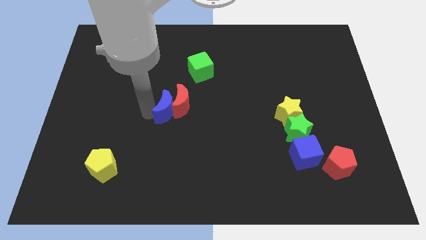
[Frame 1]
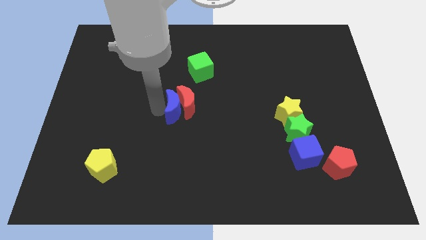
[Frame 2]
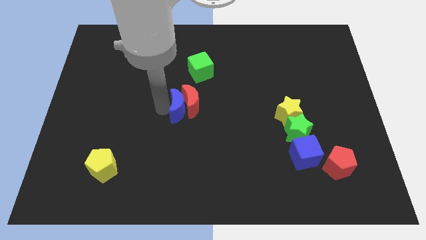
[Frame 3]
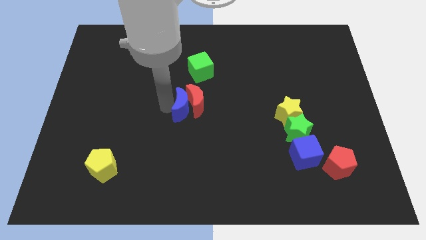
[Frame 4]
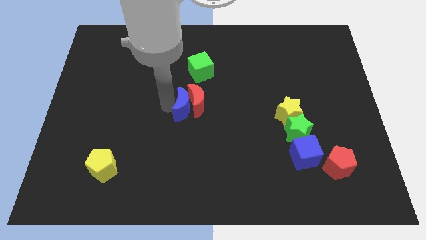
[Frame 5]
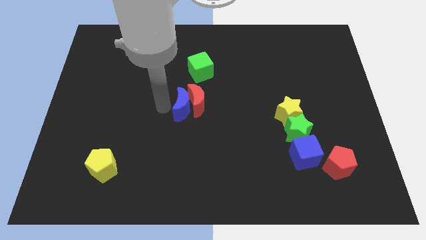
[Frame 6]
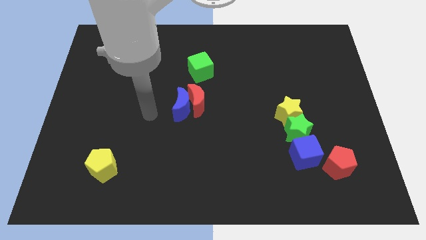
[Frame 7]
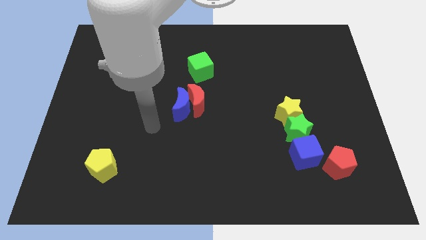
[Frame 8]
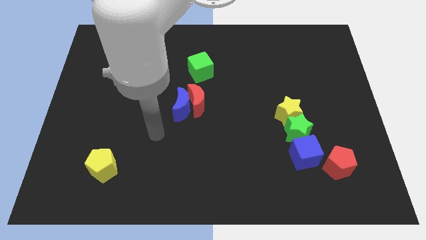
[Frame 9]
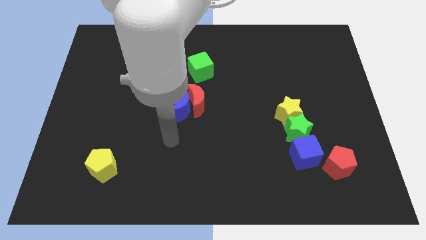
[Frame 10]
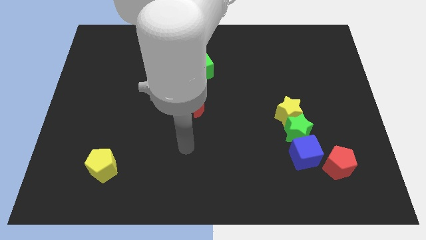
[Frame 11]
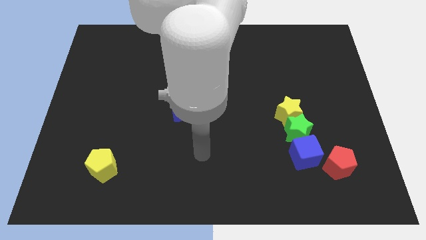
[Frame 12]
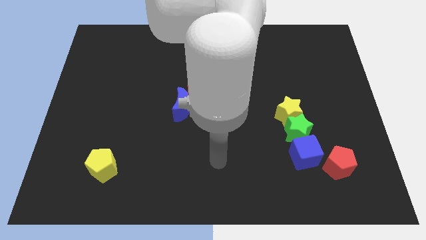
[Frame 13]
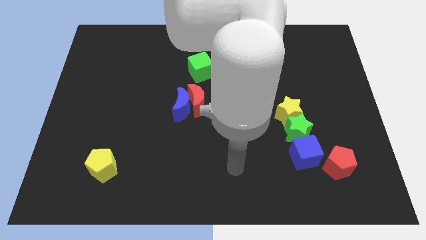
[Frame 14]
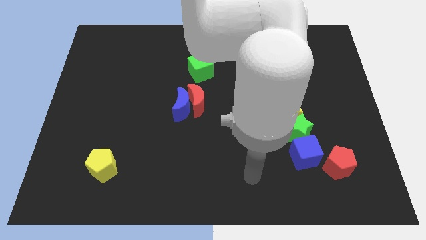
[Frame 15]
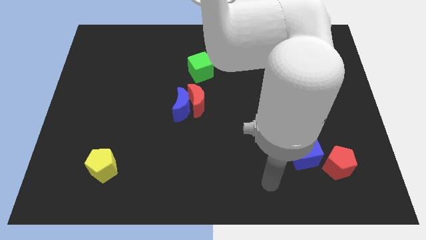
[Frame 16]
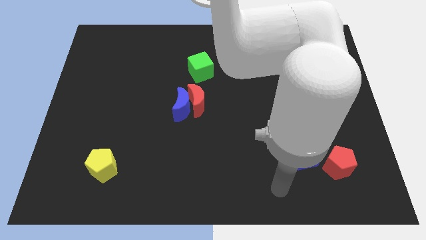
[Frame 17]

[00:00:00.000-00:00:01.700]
move blue moon and the red moon slightly to the right

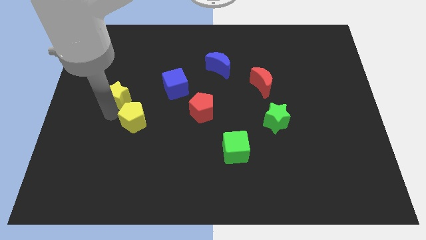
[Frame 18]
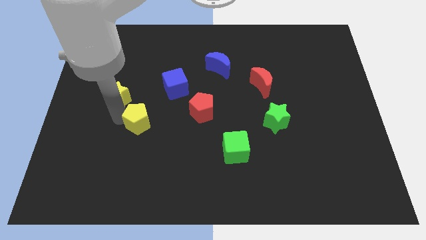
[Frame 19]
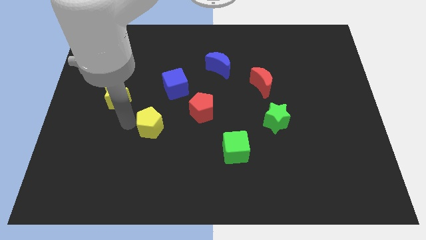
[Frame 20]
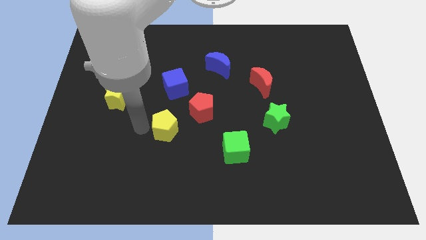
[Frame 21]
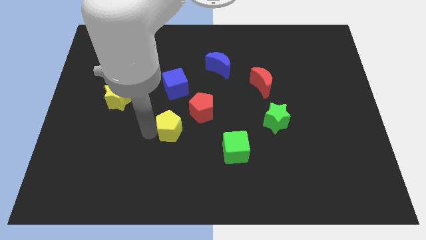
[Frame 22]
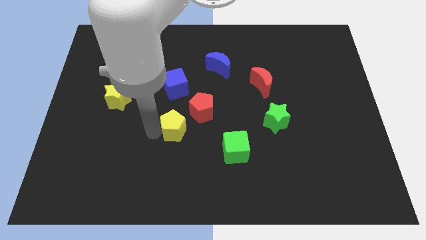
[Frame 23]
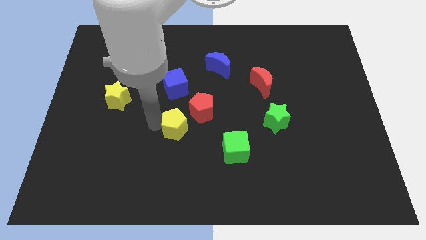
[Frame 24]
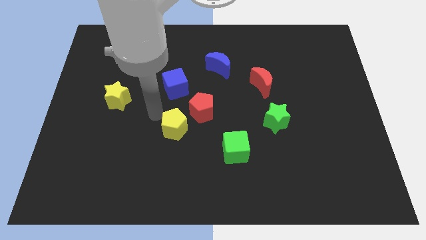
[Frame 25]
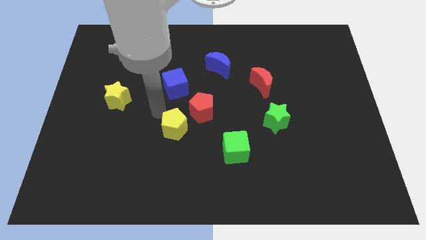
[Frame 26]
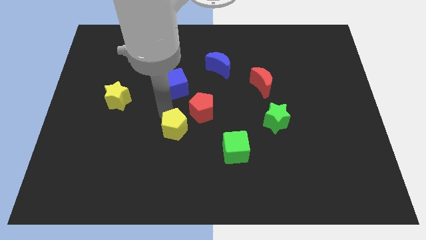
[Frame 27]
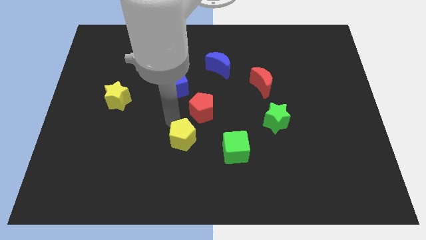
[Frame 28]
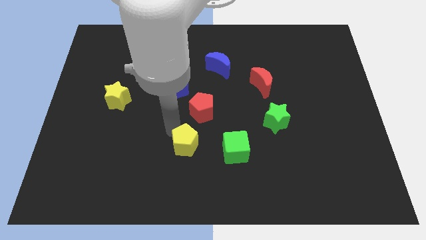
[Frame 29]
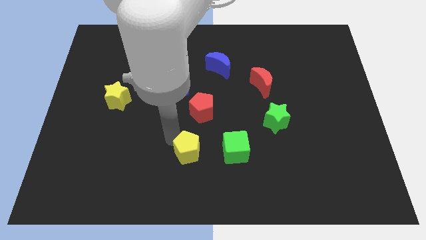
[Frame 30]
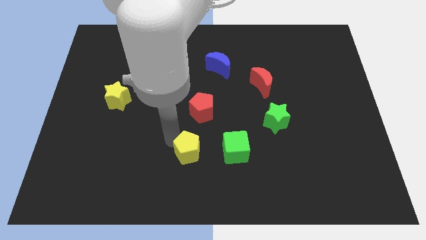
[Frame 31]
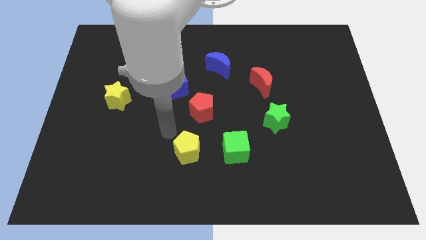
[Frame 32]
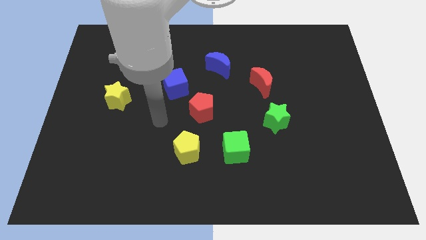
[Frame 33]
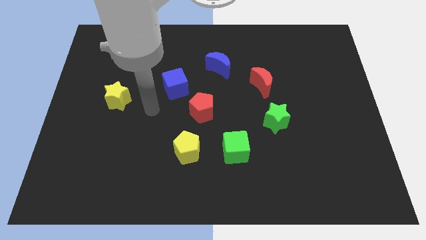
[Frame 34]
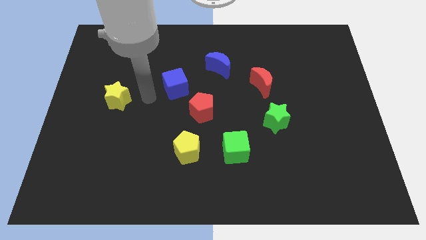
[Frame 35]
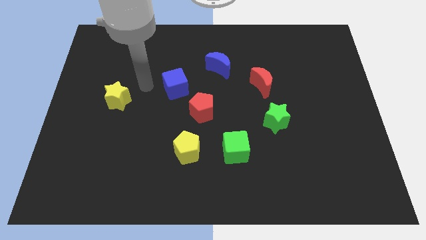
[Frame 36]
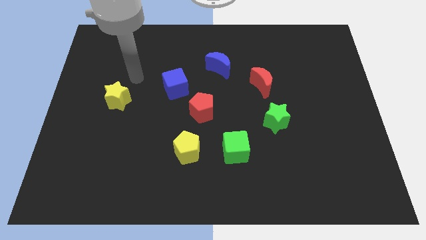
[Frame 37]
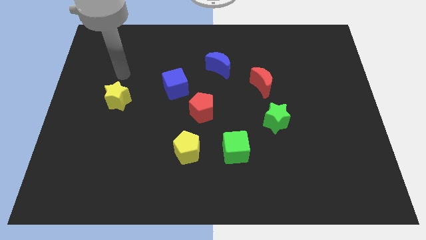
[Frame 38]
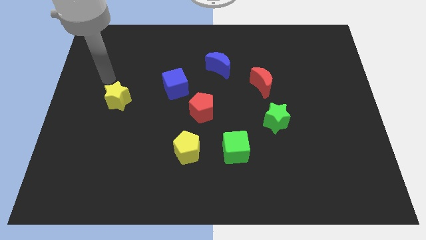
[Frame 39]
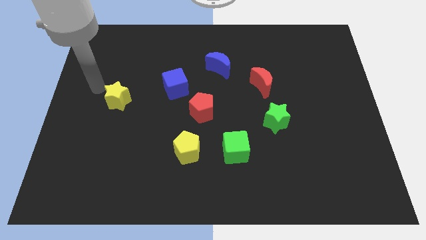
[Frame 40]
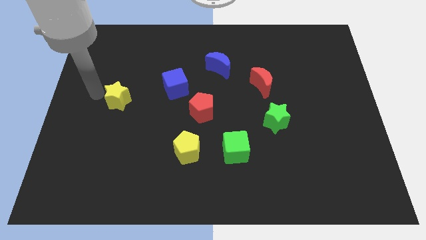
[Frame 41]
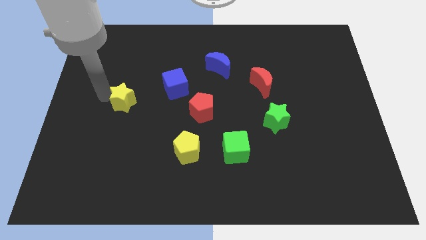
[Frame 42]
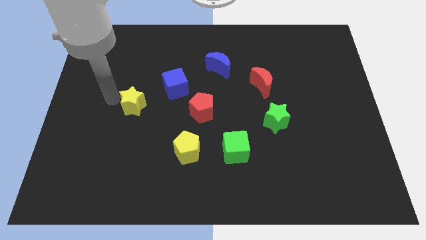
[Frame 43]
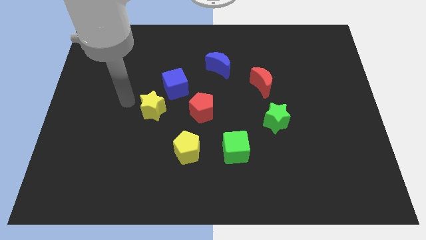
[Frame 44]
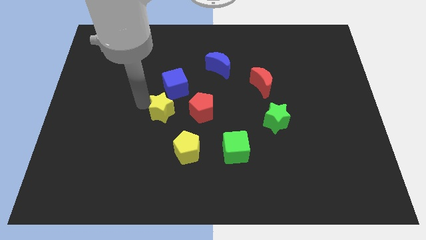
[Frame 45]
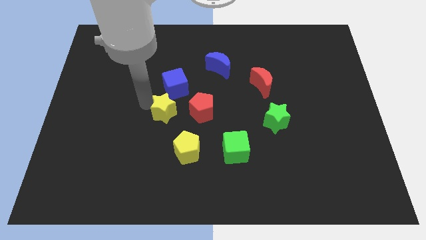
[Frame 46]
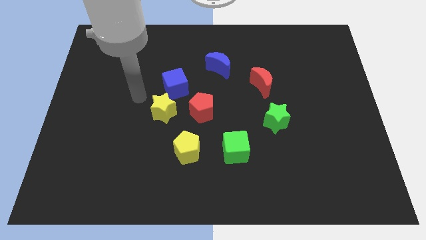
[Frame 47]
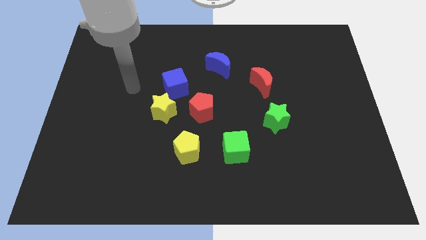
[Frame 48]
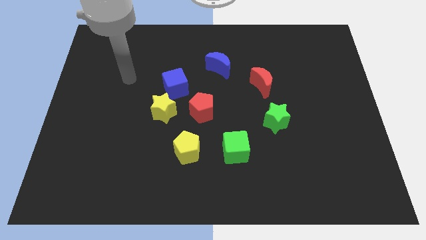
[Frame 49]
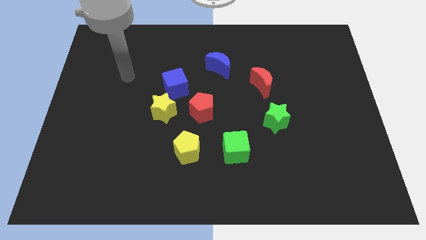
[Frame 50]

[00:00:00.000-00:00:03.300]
place the yellow blocks diagonal to each other

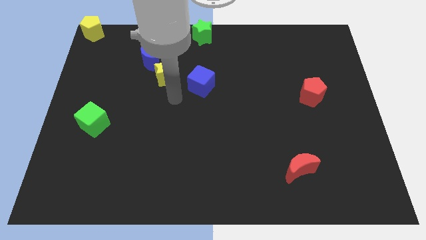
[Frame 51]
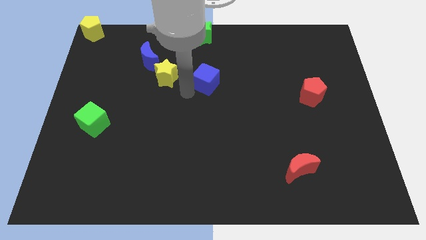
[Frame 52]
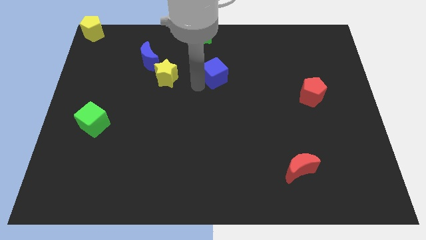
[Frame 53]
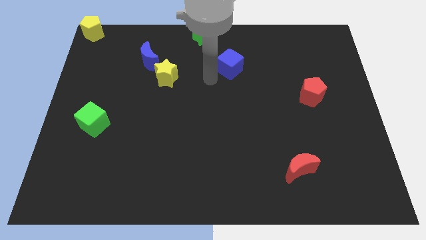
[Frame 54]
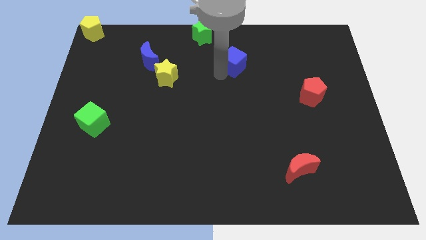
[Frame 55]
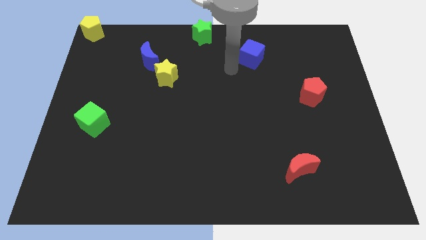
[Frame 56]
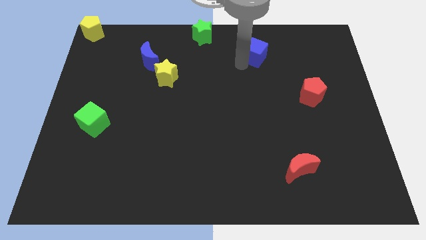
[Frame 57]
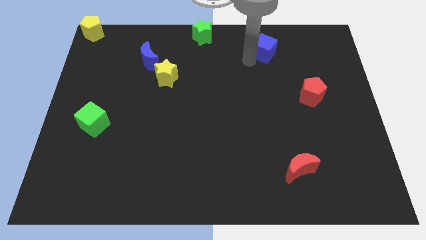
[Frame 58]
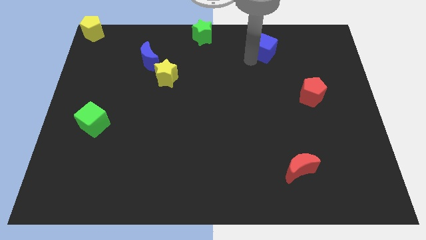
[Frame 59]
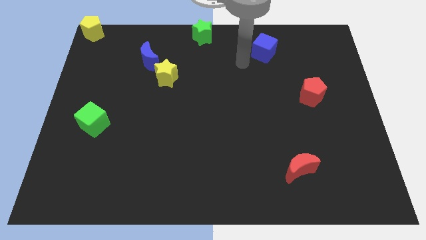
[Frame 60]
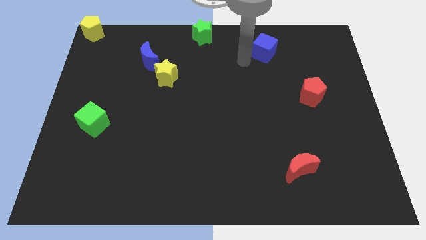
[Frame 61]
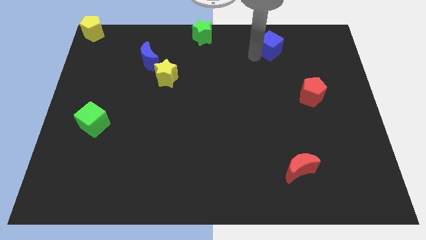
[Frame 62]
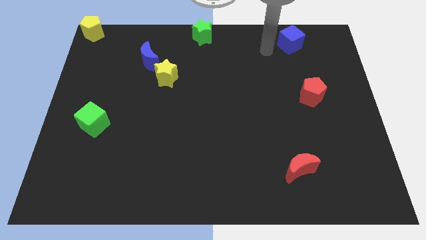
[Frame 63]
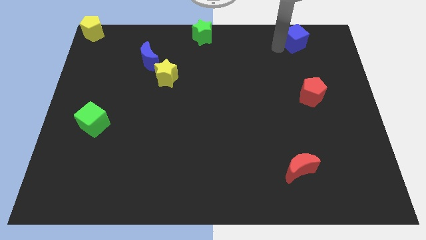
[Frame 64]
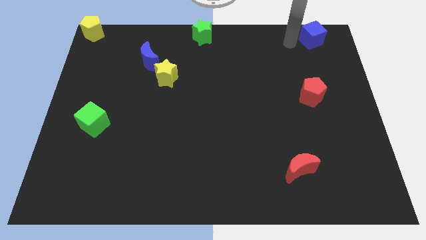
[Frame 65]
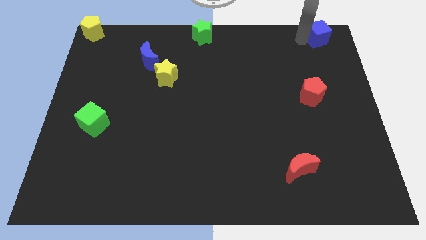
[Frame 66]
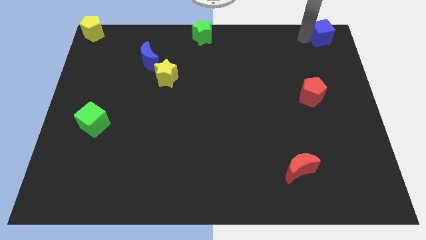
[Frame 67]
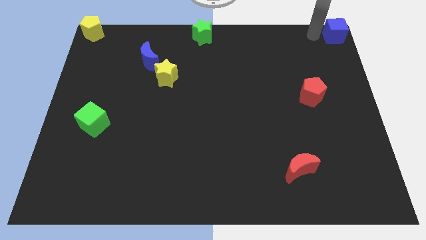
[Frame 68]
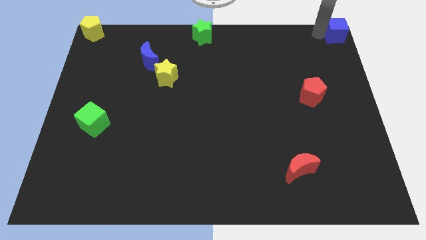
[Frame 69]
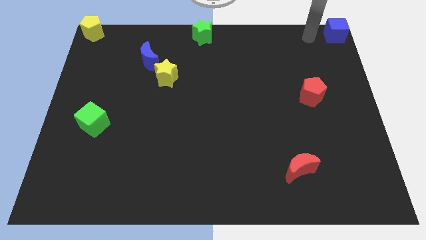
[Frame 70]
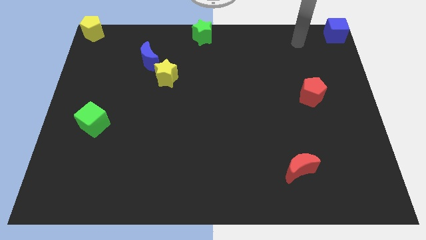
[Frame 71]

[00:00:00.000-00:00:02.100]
move the blue cube to the top right corner of the board

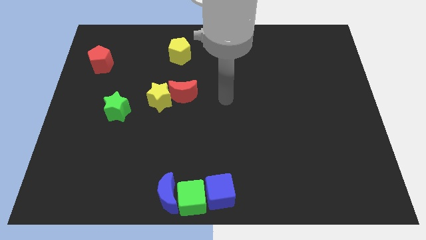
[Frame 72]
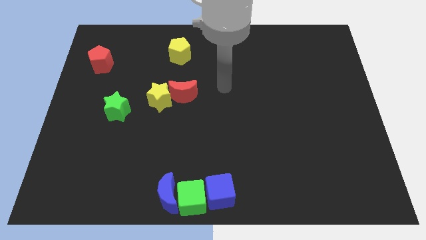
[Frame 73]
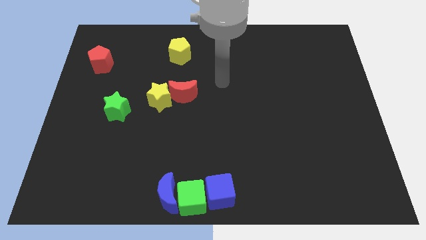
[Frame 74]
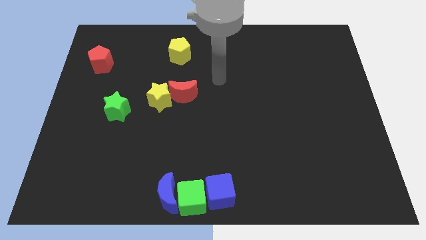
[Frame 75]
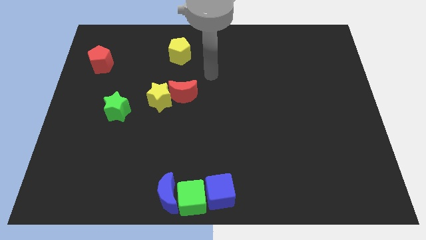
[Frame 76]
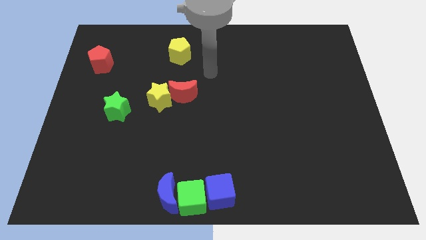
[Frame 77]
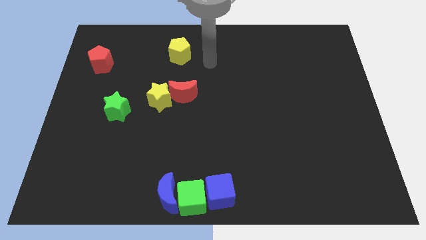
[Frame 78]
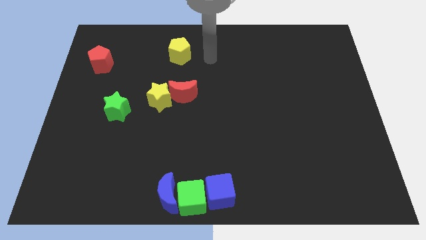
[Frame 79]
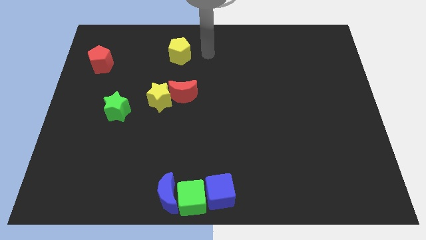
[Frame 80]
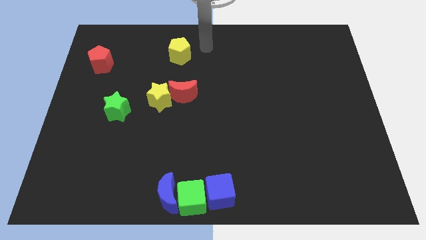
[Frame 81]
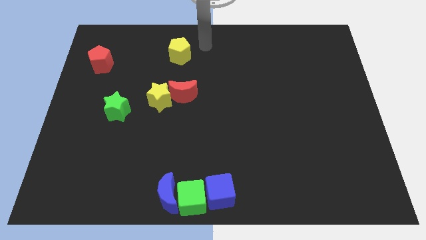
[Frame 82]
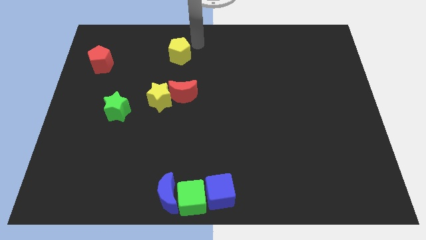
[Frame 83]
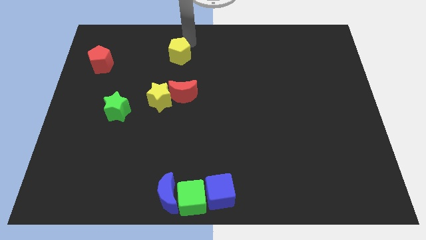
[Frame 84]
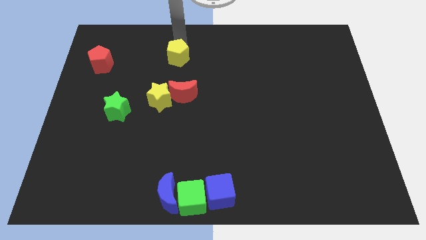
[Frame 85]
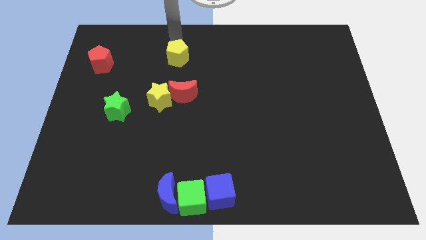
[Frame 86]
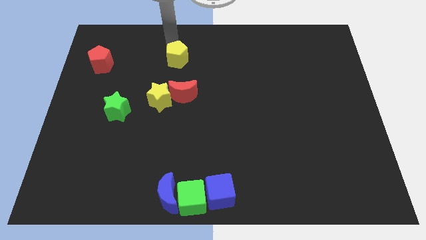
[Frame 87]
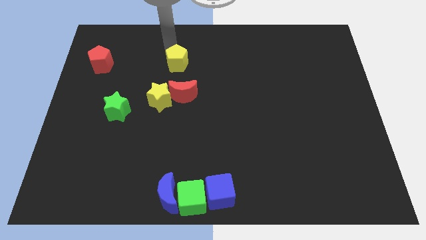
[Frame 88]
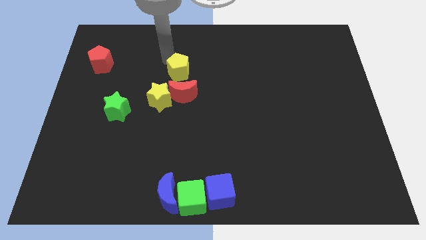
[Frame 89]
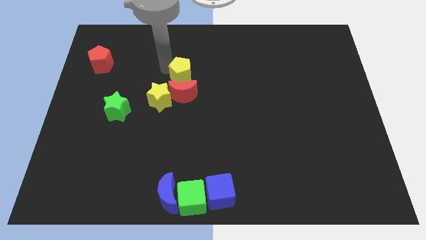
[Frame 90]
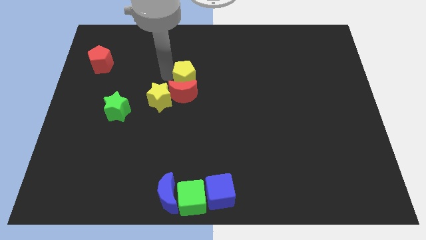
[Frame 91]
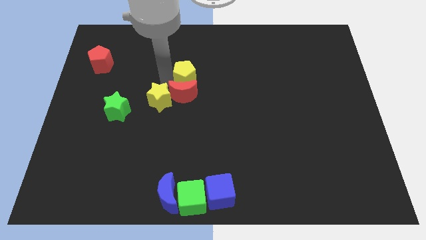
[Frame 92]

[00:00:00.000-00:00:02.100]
put the yellow pentagon to the top side of the red crescent
